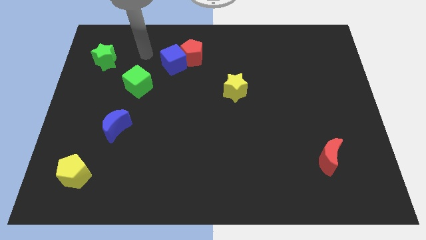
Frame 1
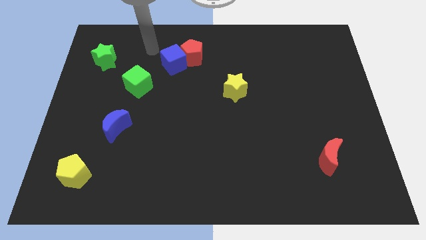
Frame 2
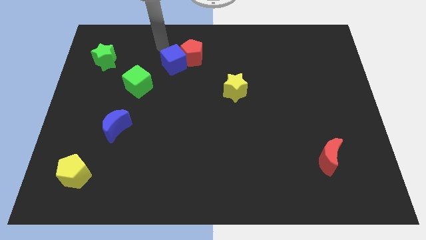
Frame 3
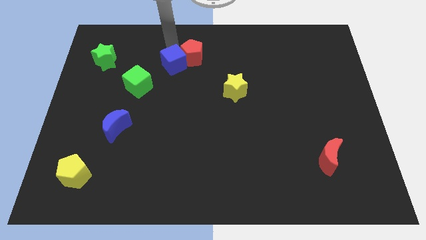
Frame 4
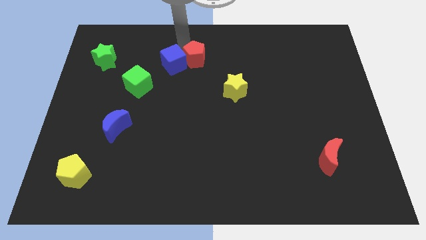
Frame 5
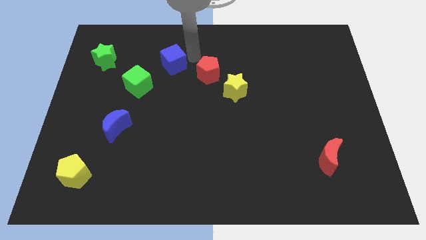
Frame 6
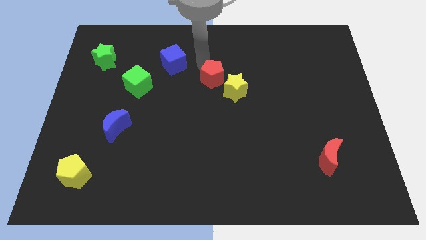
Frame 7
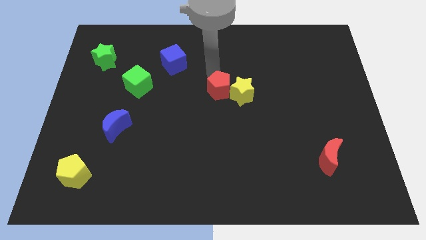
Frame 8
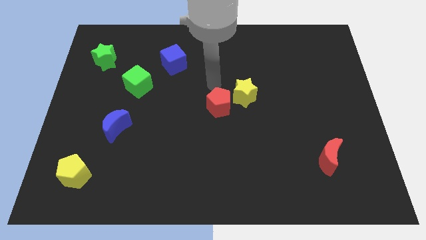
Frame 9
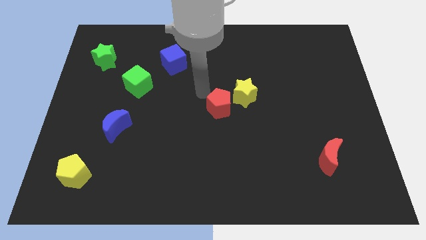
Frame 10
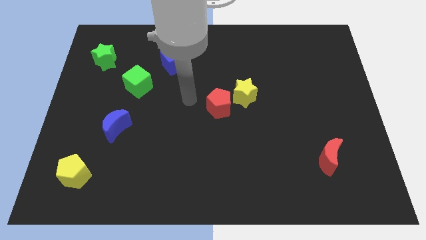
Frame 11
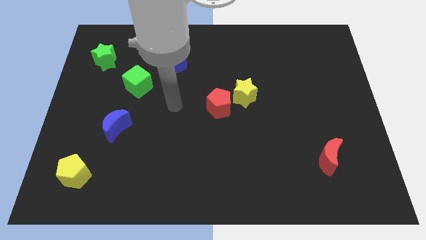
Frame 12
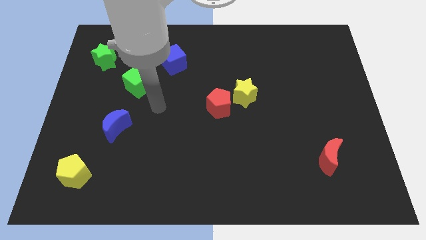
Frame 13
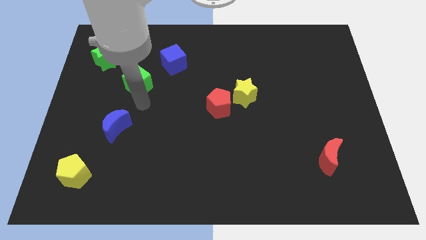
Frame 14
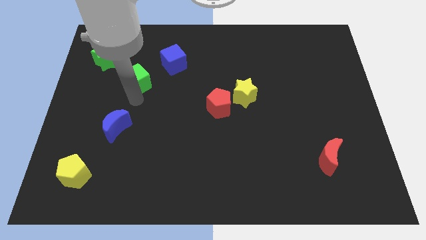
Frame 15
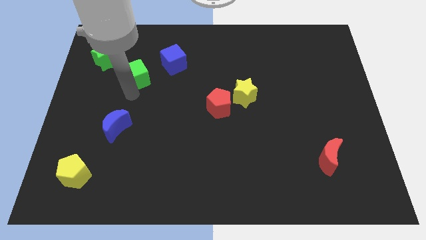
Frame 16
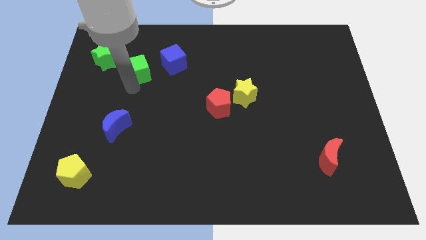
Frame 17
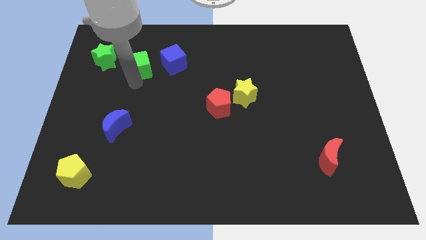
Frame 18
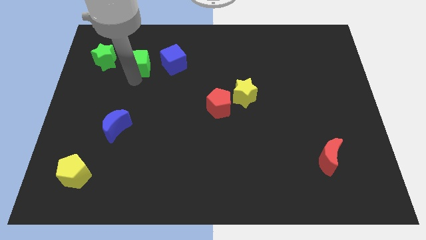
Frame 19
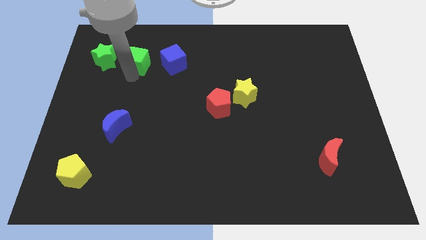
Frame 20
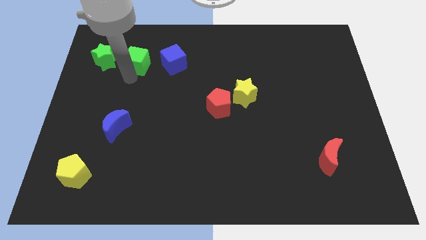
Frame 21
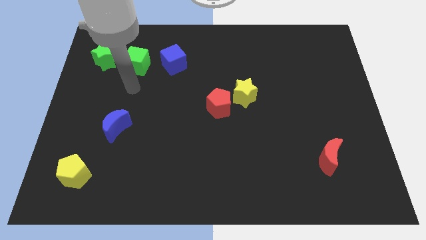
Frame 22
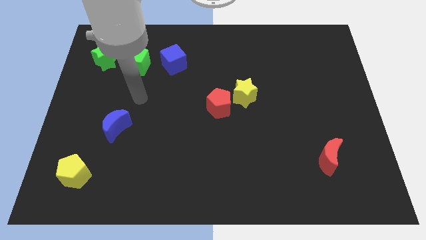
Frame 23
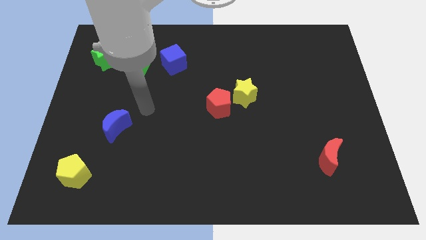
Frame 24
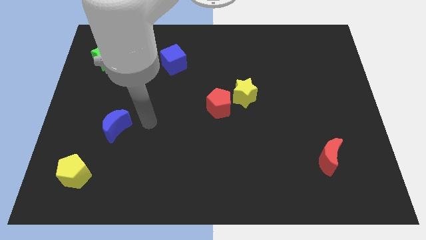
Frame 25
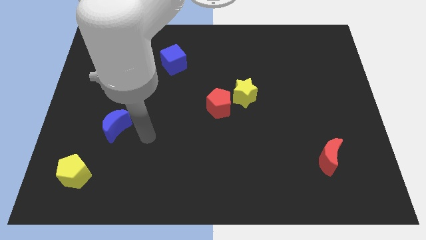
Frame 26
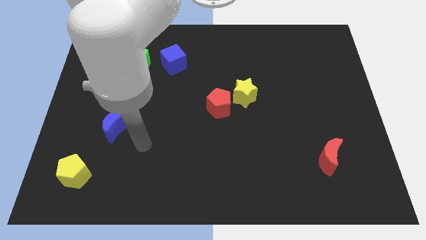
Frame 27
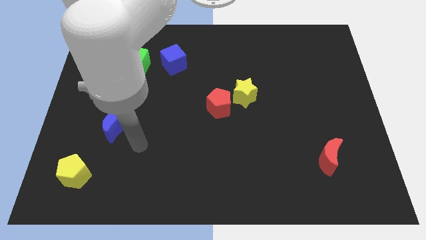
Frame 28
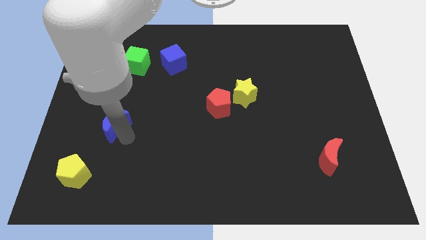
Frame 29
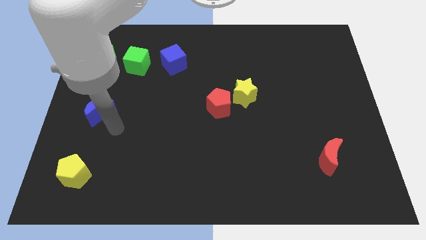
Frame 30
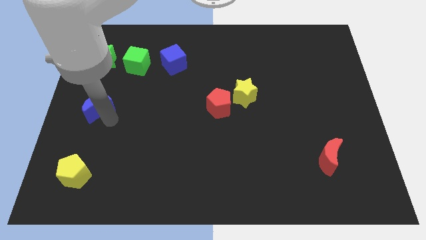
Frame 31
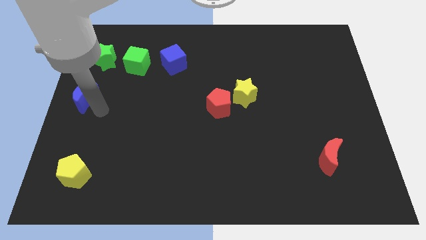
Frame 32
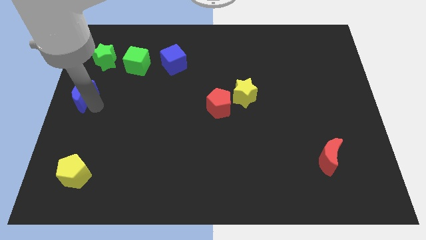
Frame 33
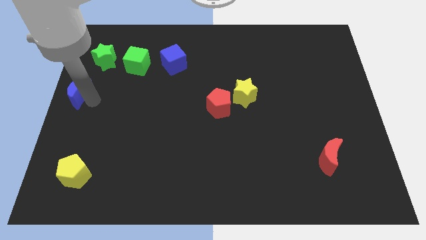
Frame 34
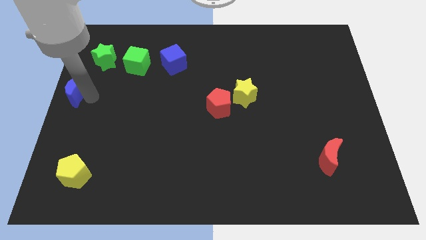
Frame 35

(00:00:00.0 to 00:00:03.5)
slightly move the red pentagon towards the yellow star

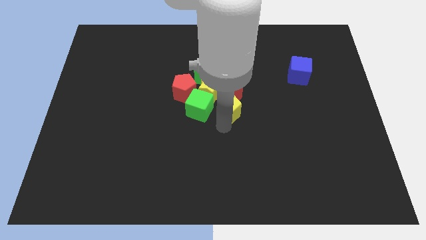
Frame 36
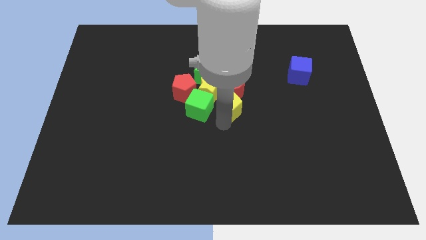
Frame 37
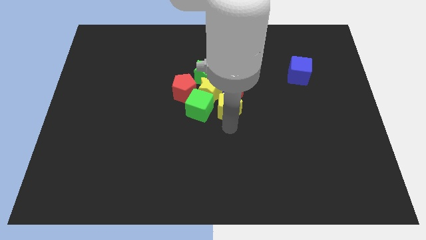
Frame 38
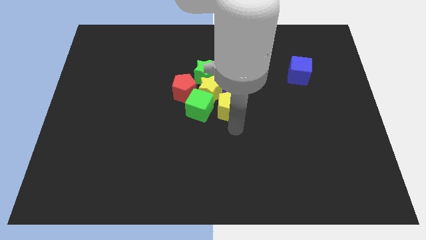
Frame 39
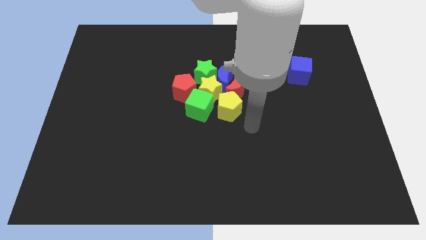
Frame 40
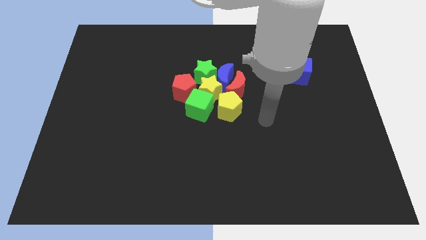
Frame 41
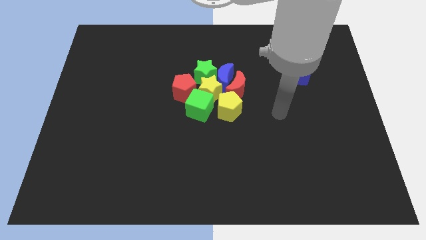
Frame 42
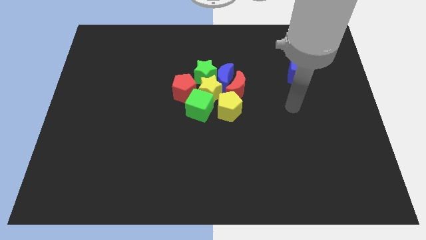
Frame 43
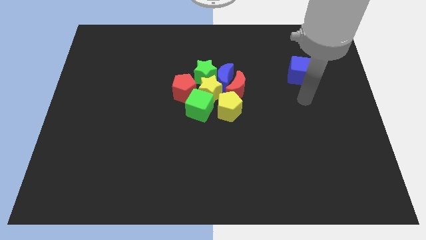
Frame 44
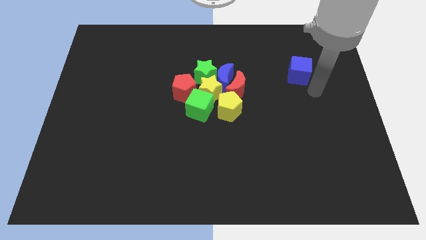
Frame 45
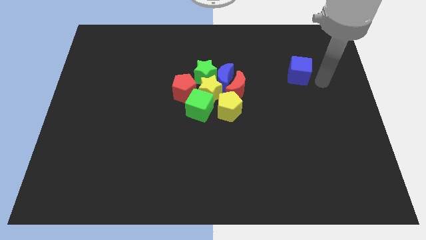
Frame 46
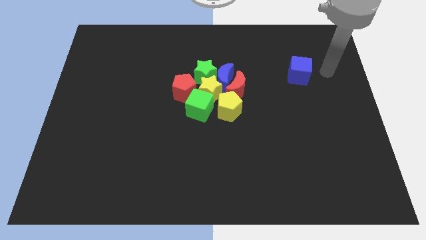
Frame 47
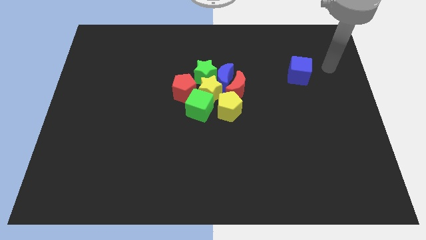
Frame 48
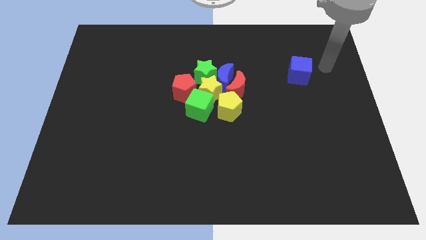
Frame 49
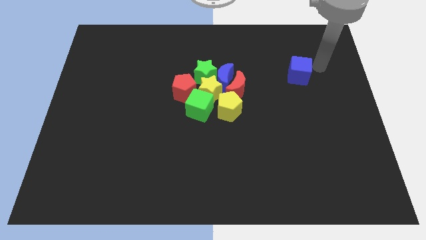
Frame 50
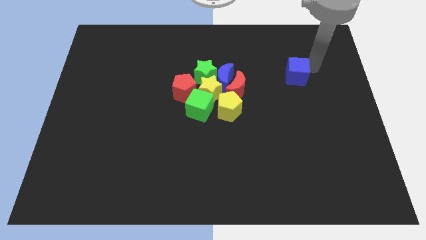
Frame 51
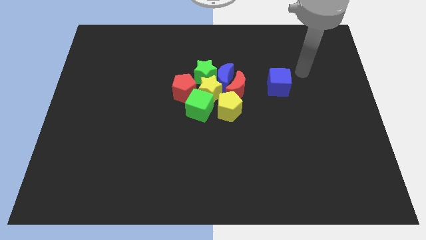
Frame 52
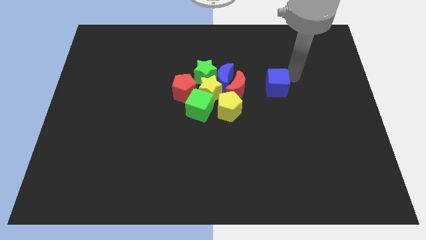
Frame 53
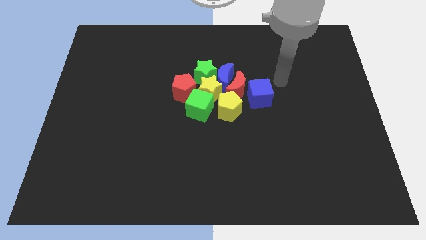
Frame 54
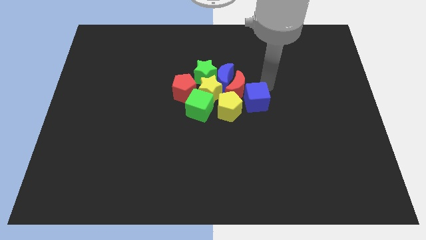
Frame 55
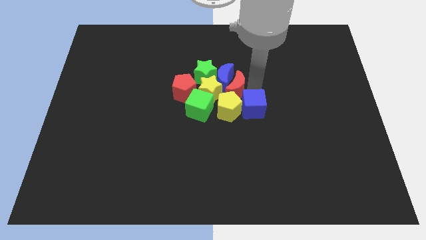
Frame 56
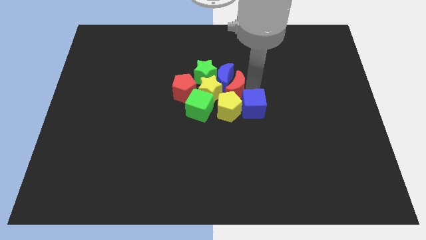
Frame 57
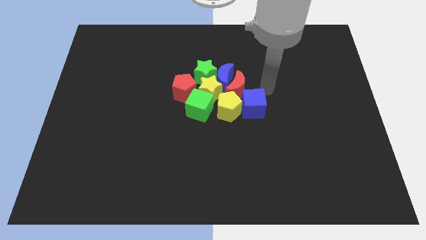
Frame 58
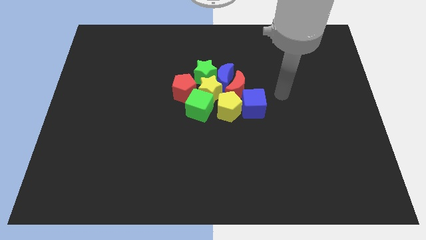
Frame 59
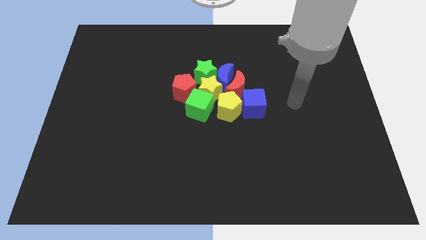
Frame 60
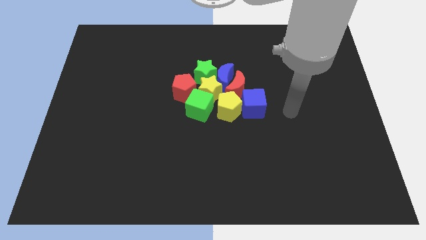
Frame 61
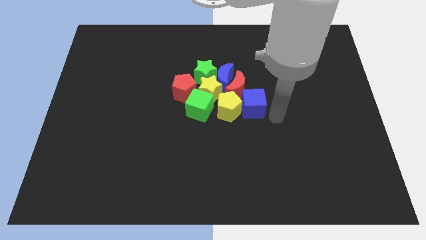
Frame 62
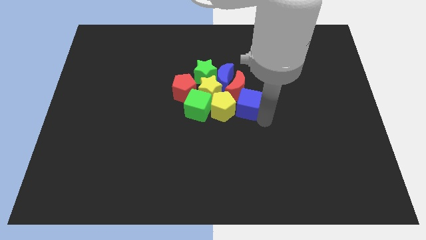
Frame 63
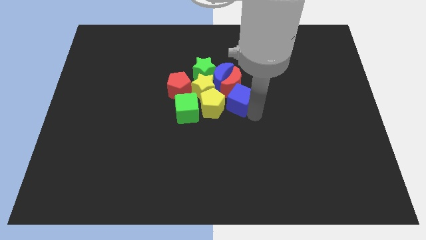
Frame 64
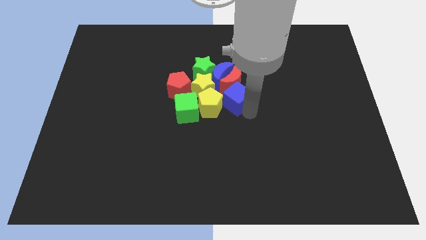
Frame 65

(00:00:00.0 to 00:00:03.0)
push the blue cube into the red moon

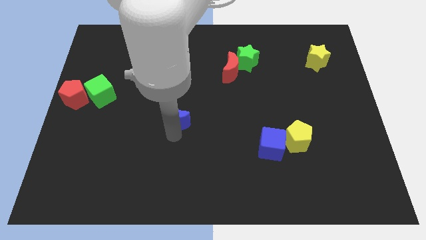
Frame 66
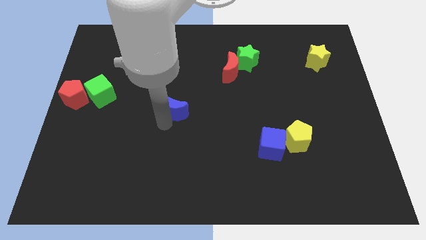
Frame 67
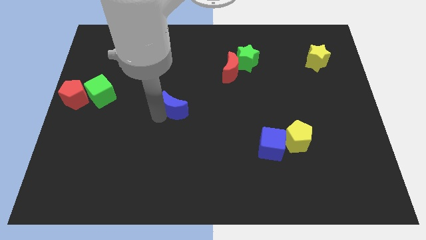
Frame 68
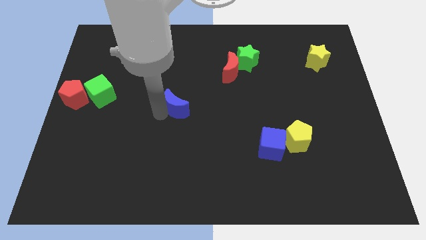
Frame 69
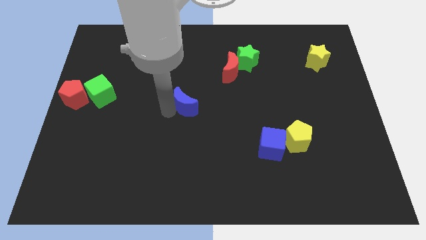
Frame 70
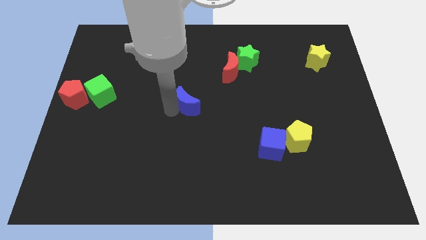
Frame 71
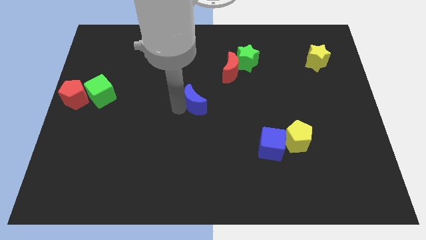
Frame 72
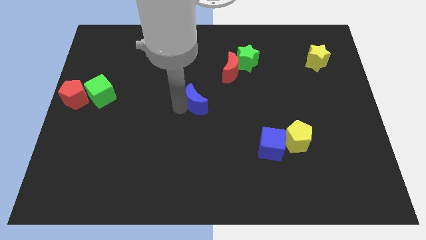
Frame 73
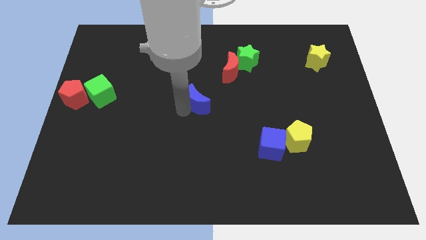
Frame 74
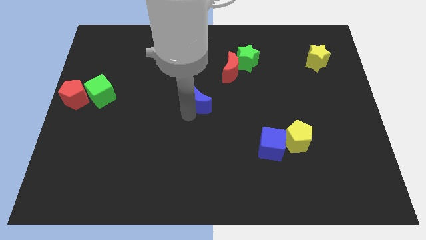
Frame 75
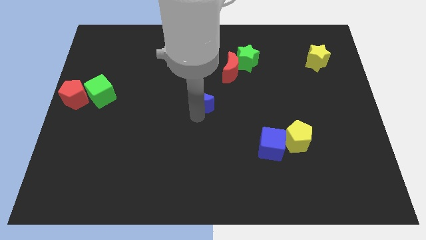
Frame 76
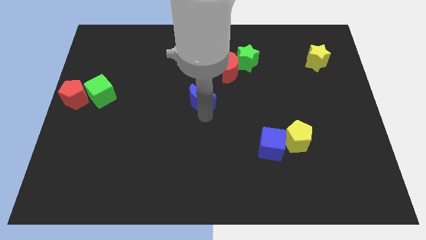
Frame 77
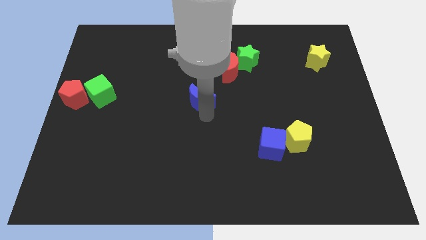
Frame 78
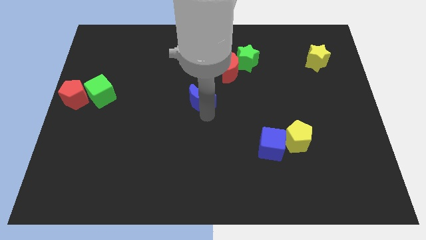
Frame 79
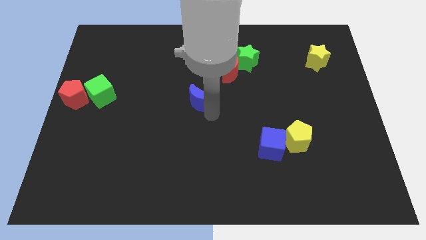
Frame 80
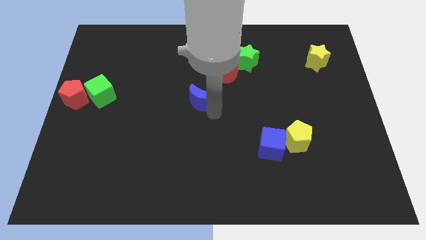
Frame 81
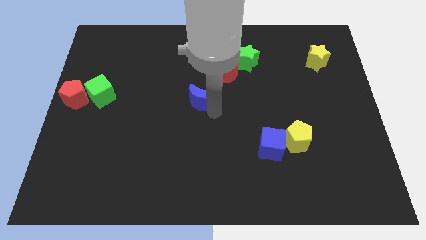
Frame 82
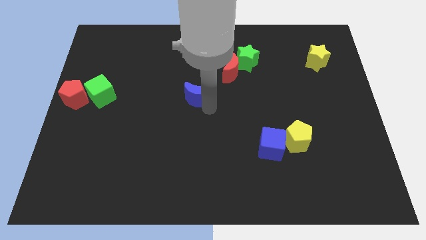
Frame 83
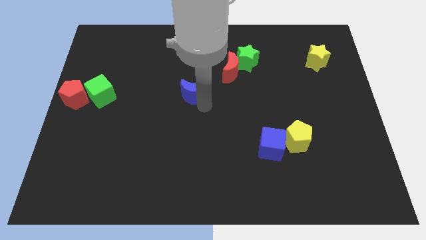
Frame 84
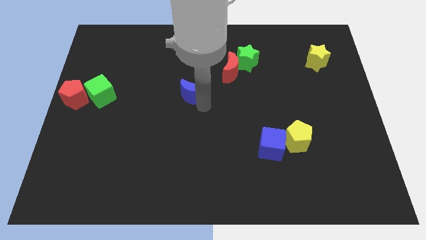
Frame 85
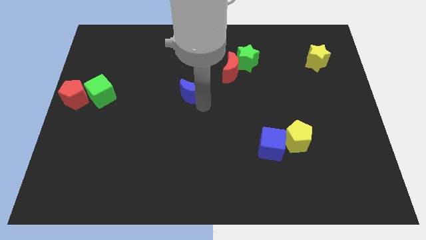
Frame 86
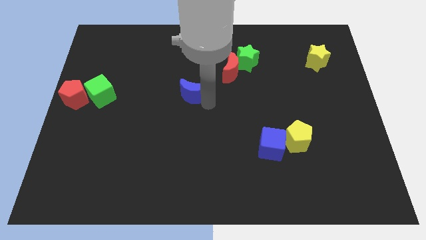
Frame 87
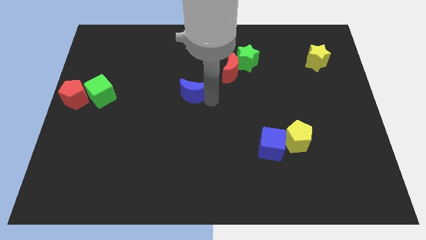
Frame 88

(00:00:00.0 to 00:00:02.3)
push blue crescent beside green cube
